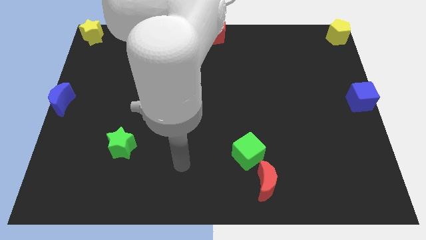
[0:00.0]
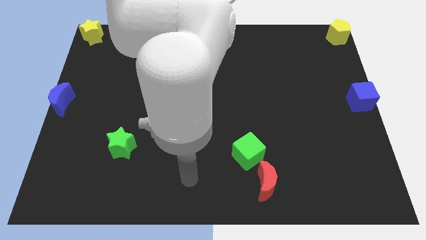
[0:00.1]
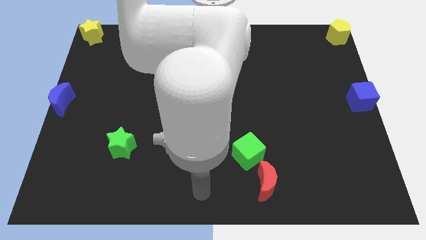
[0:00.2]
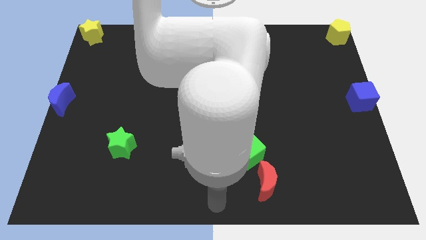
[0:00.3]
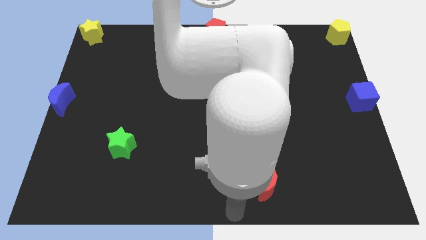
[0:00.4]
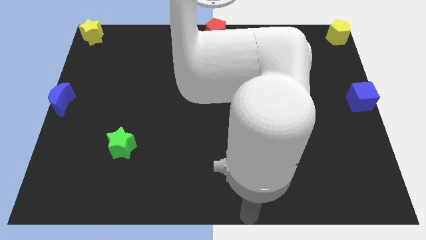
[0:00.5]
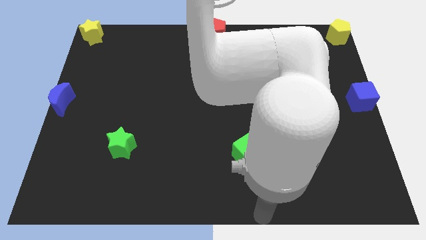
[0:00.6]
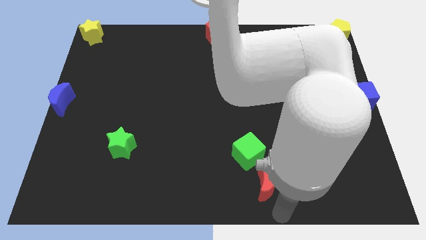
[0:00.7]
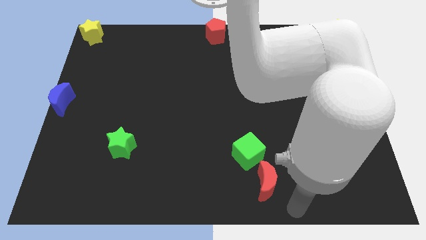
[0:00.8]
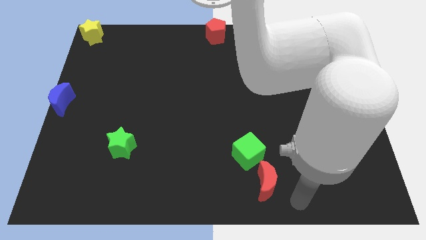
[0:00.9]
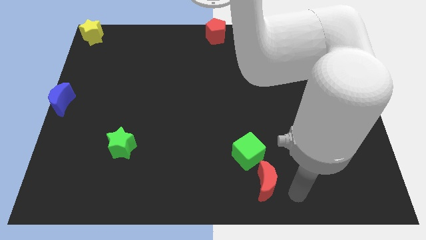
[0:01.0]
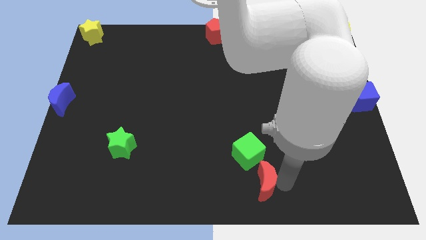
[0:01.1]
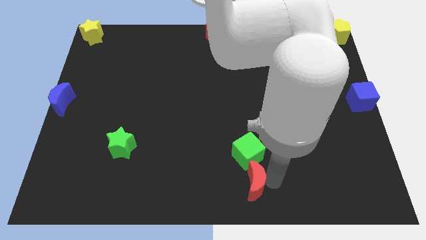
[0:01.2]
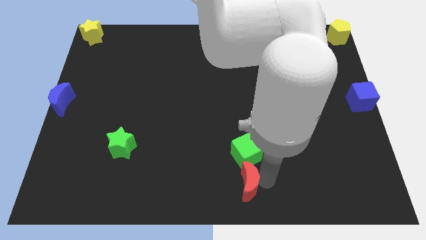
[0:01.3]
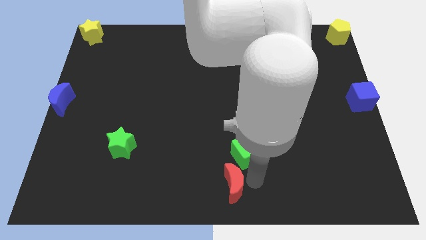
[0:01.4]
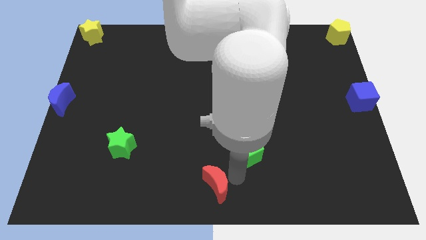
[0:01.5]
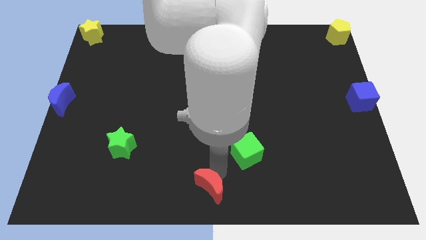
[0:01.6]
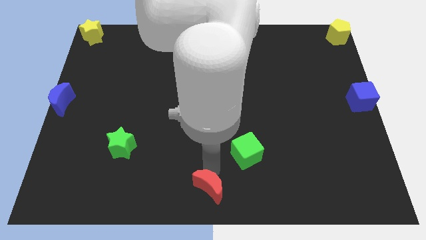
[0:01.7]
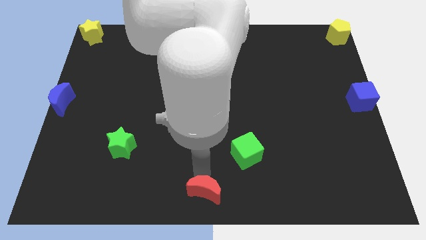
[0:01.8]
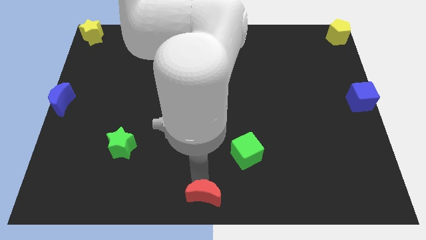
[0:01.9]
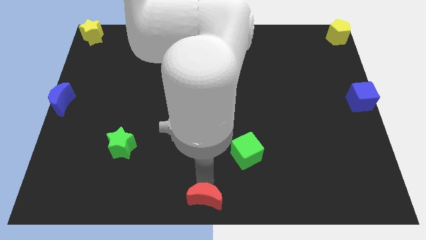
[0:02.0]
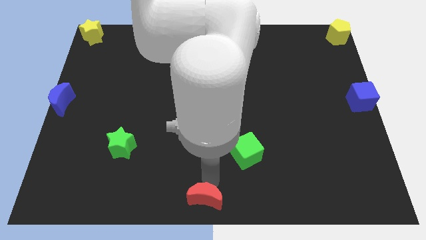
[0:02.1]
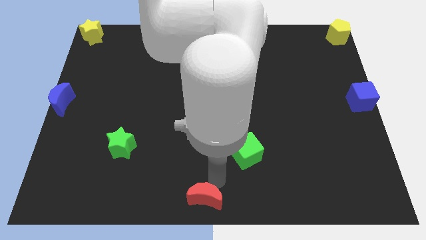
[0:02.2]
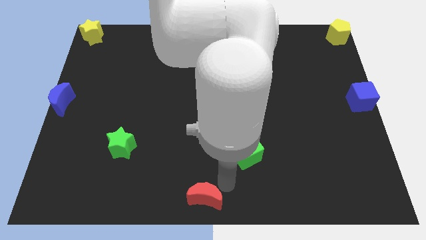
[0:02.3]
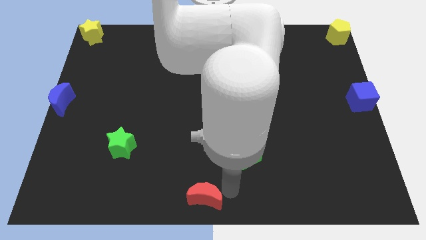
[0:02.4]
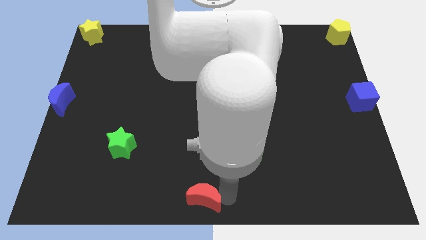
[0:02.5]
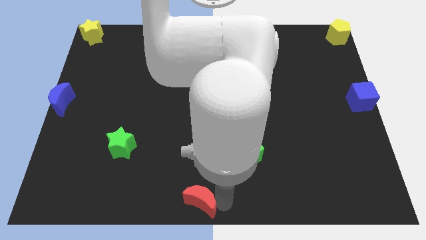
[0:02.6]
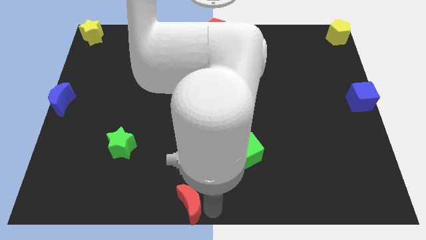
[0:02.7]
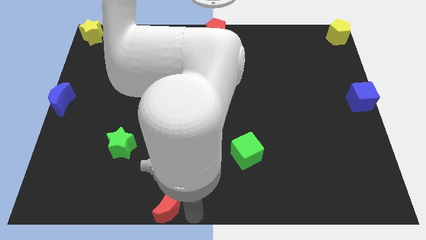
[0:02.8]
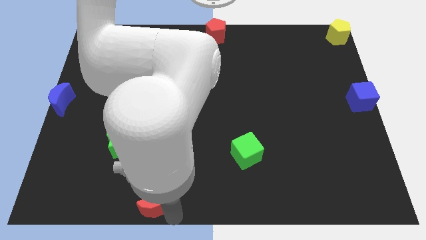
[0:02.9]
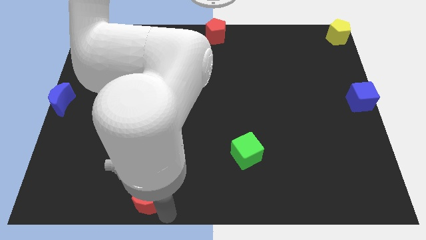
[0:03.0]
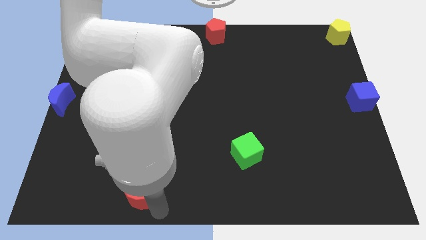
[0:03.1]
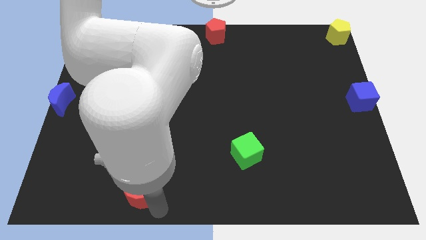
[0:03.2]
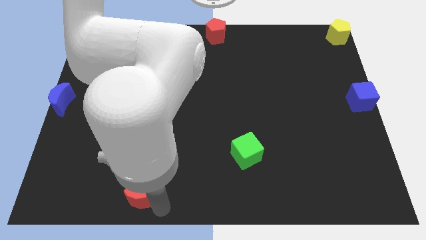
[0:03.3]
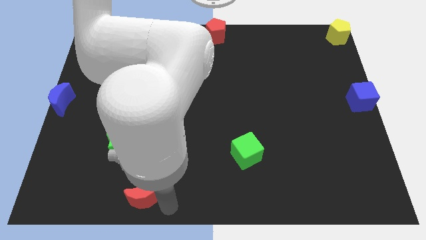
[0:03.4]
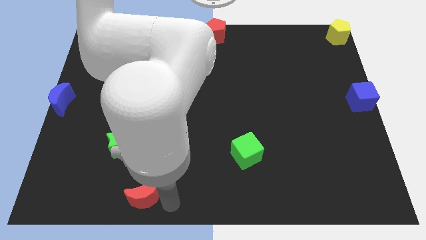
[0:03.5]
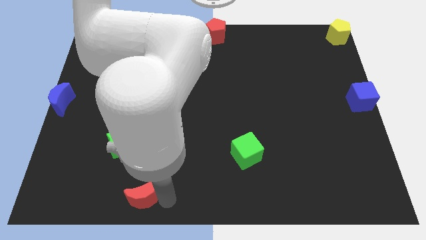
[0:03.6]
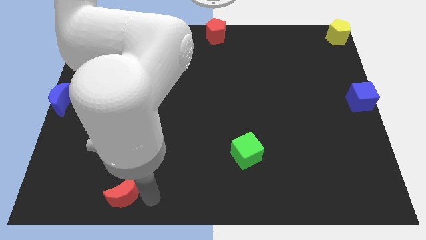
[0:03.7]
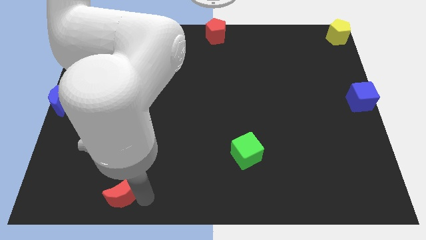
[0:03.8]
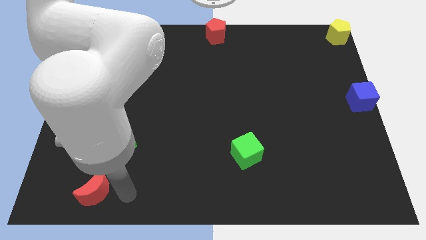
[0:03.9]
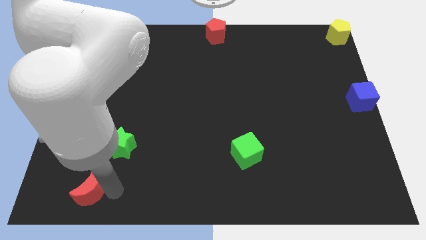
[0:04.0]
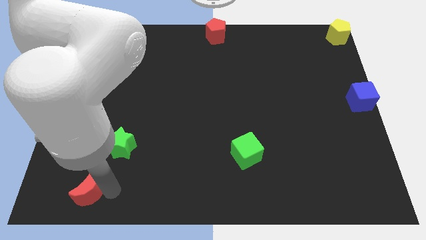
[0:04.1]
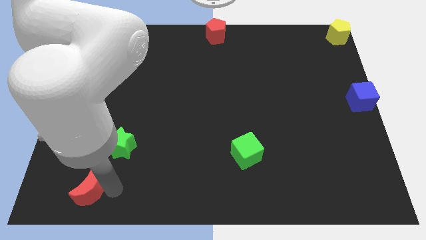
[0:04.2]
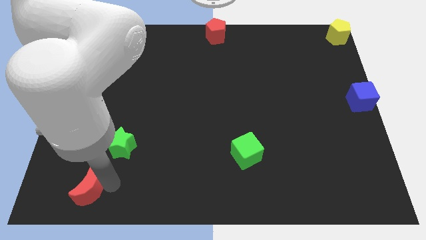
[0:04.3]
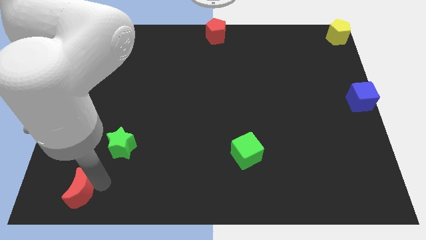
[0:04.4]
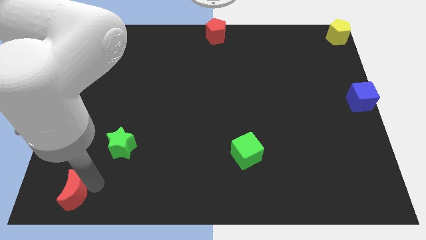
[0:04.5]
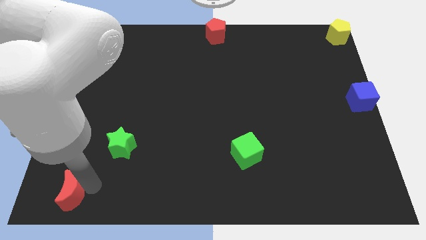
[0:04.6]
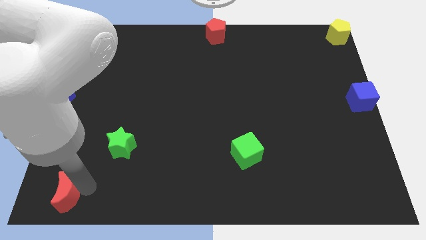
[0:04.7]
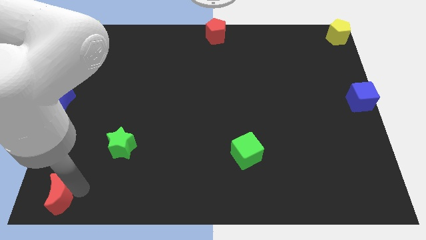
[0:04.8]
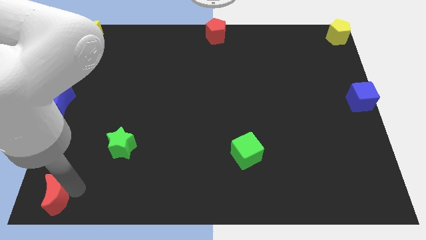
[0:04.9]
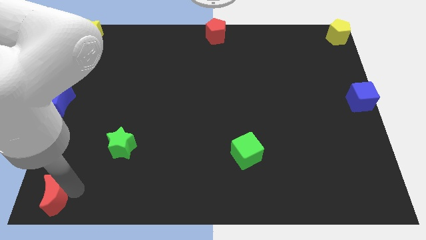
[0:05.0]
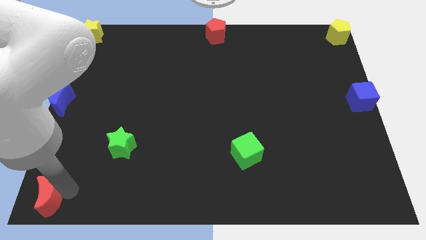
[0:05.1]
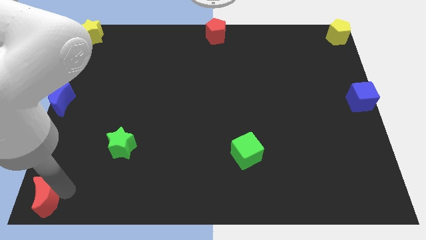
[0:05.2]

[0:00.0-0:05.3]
move the red moon to the bottom left

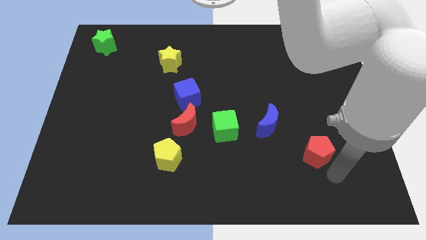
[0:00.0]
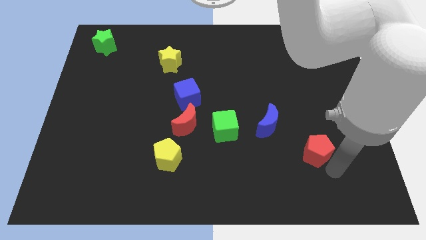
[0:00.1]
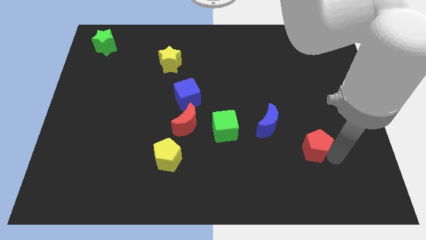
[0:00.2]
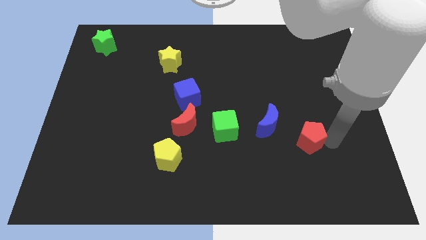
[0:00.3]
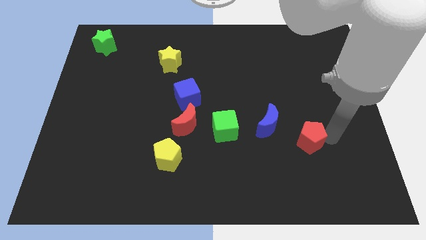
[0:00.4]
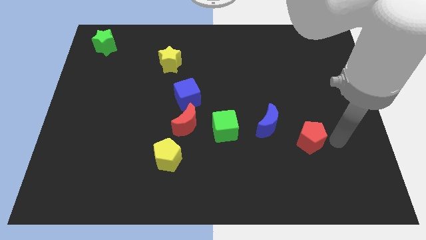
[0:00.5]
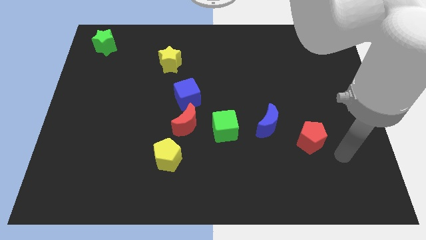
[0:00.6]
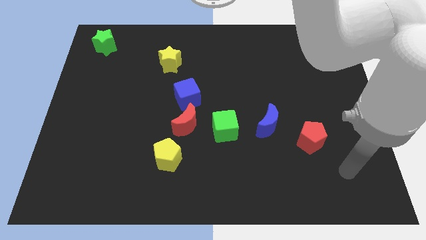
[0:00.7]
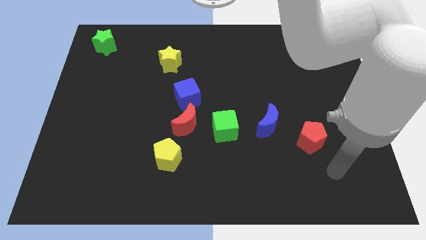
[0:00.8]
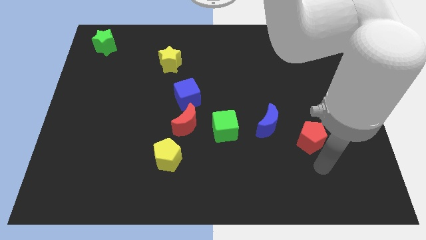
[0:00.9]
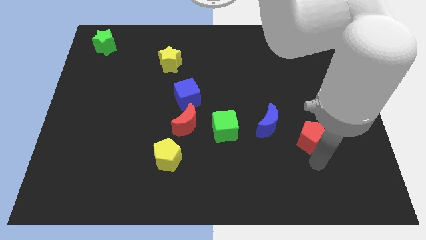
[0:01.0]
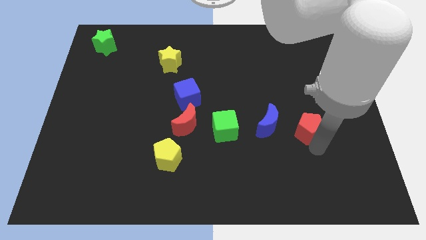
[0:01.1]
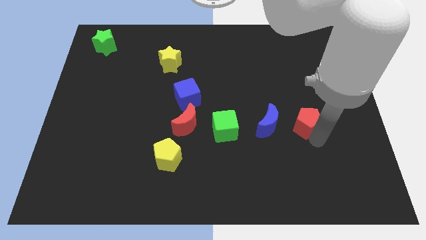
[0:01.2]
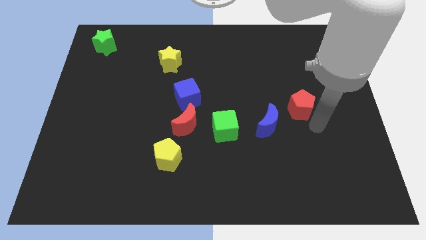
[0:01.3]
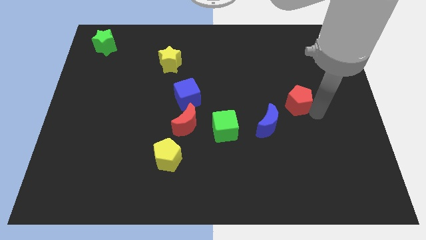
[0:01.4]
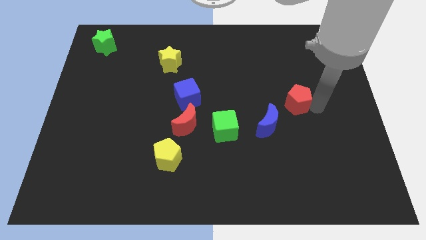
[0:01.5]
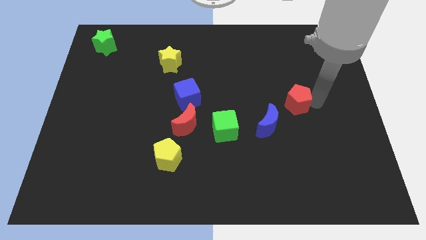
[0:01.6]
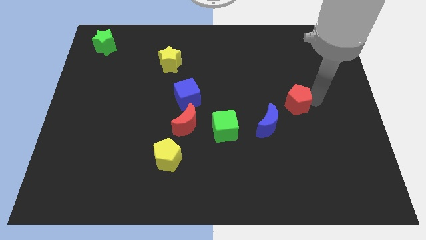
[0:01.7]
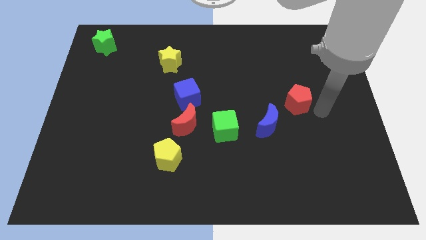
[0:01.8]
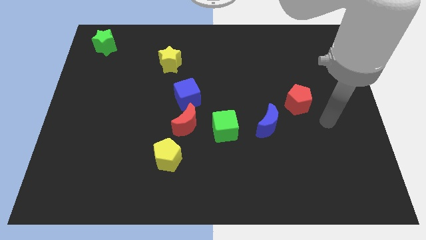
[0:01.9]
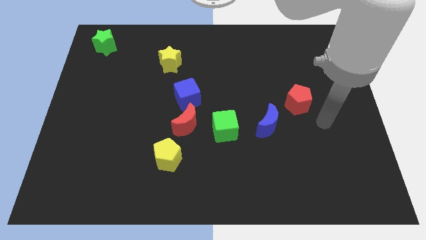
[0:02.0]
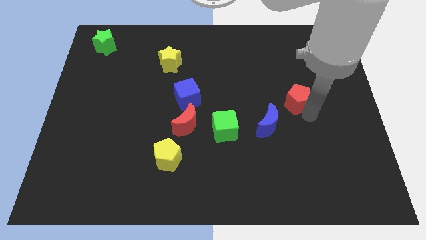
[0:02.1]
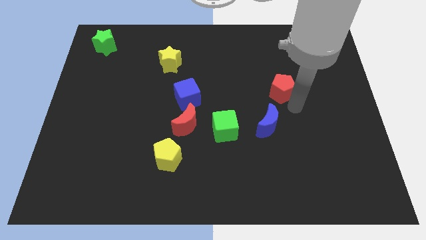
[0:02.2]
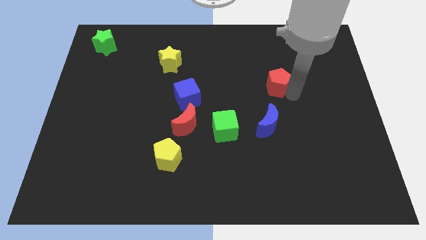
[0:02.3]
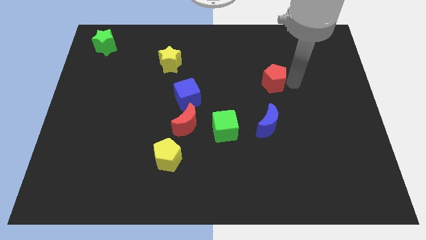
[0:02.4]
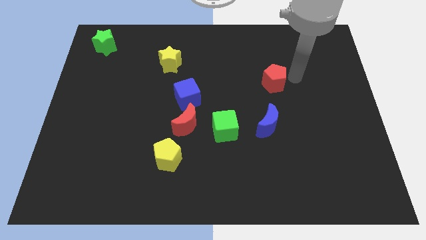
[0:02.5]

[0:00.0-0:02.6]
place the red pentagon above the blue moon

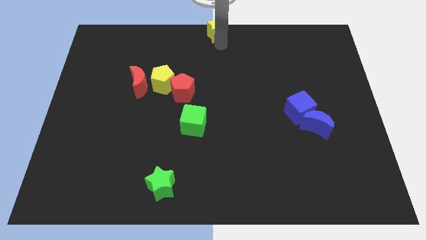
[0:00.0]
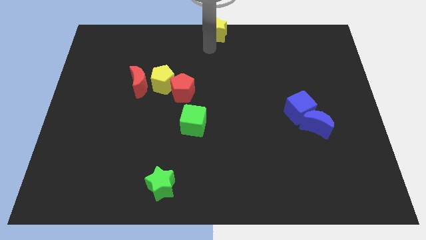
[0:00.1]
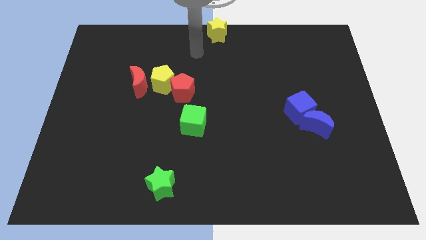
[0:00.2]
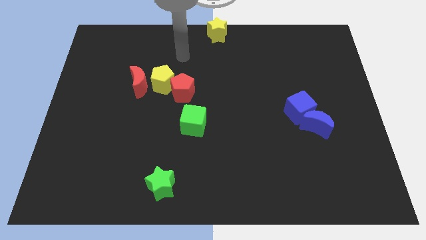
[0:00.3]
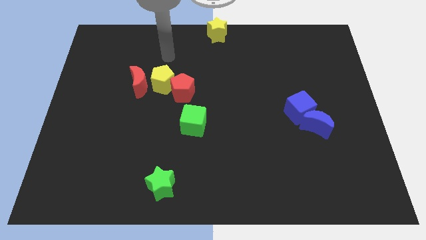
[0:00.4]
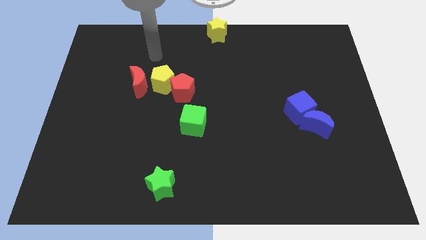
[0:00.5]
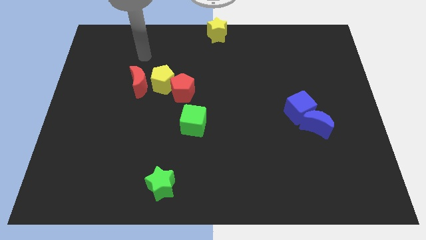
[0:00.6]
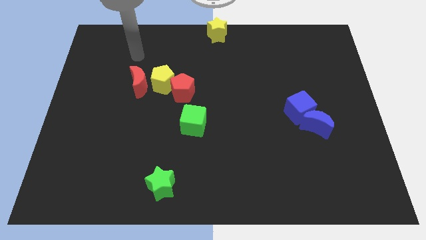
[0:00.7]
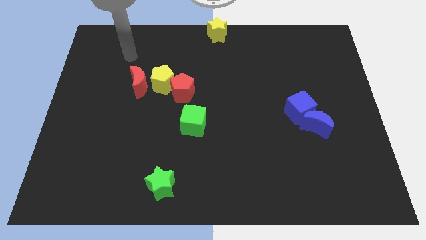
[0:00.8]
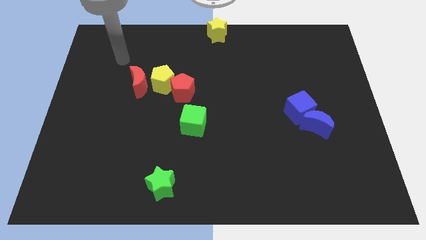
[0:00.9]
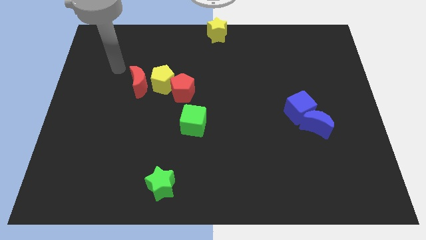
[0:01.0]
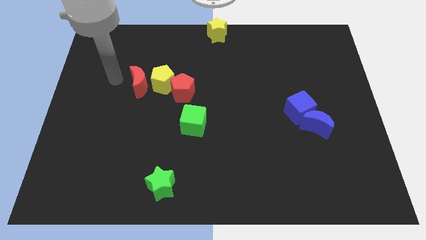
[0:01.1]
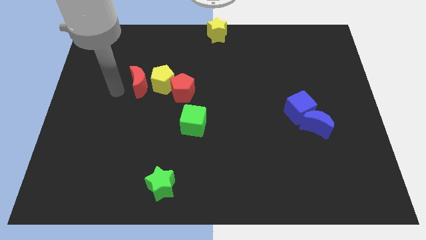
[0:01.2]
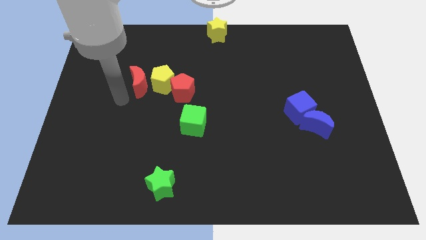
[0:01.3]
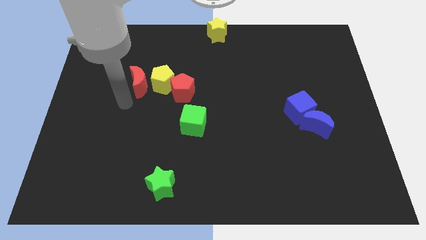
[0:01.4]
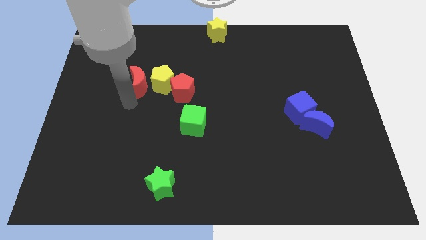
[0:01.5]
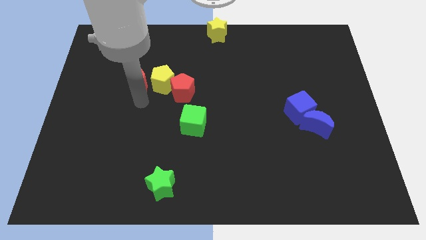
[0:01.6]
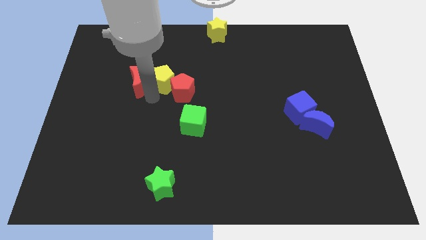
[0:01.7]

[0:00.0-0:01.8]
point your arm below yellow pentagon
